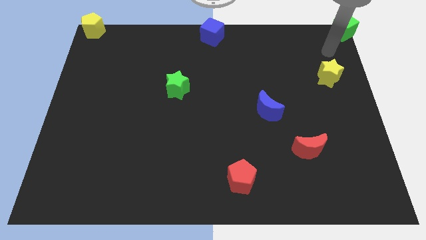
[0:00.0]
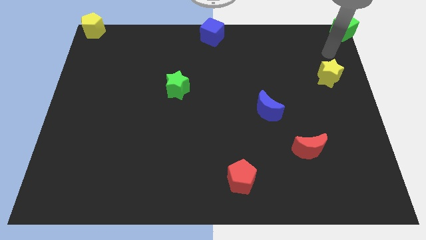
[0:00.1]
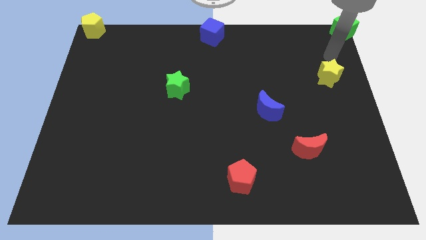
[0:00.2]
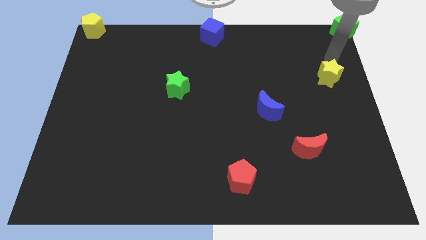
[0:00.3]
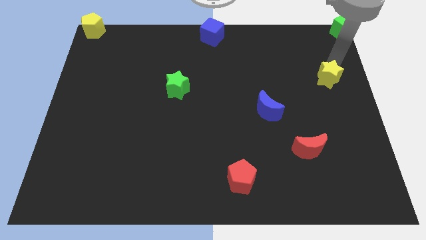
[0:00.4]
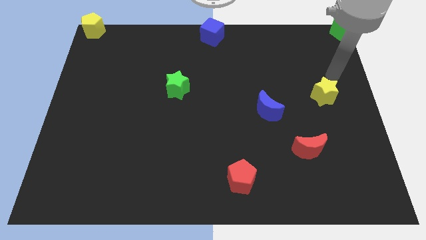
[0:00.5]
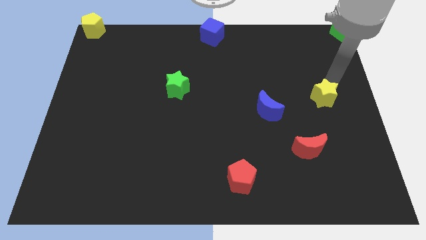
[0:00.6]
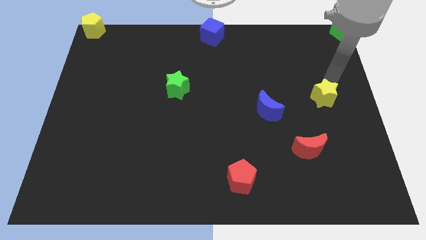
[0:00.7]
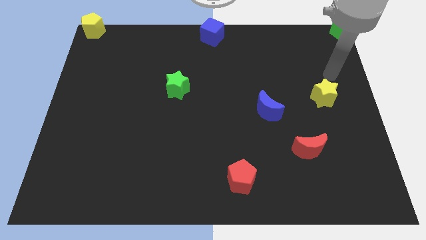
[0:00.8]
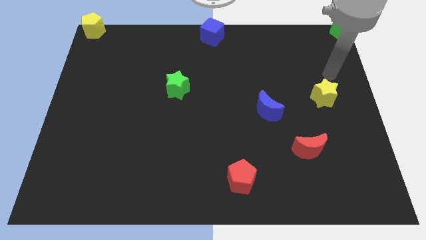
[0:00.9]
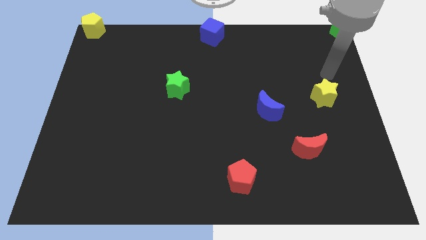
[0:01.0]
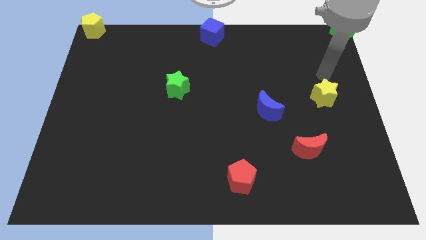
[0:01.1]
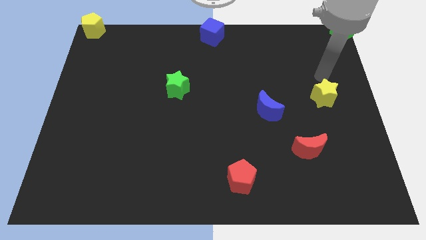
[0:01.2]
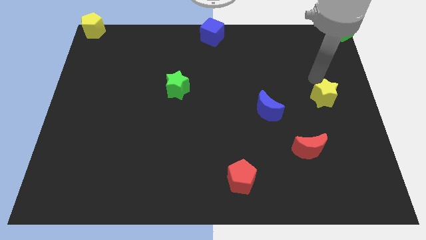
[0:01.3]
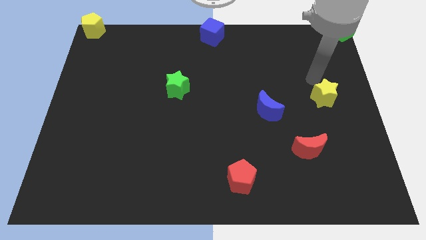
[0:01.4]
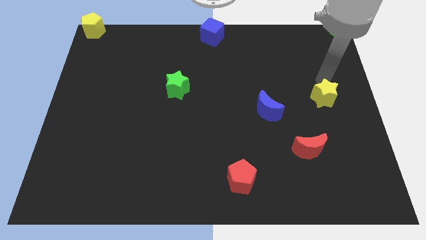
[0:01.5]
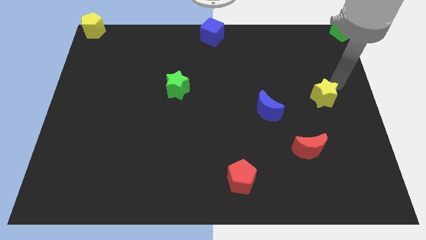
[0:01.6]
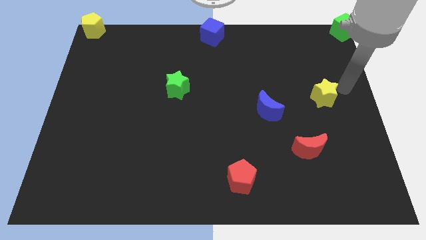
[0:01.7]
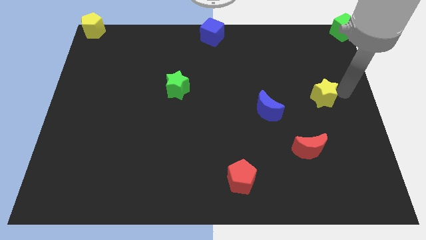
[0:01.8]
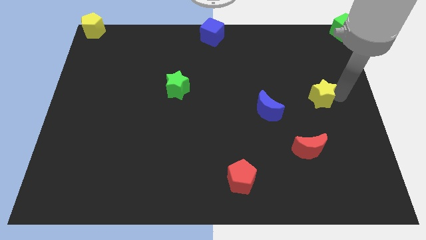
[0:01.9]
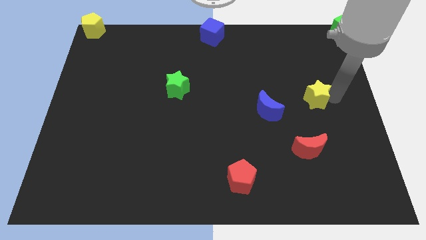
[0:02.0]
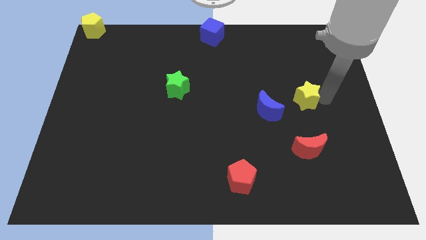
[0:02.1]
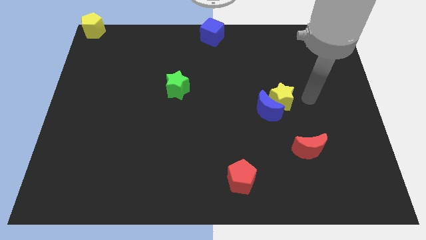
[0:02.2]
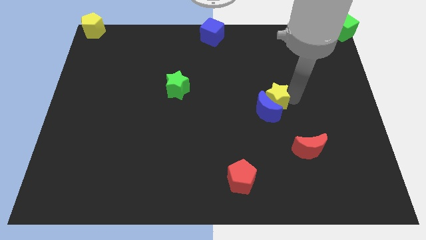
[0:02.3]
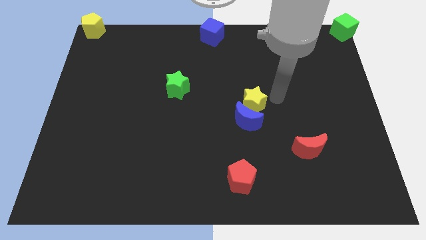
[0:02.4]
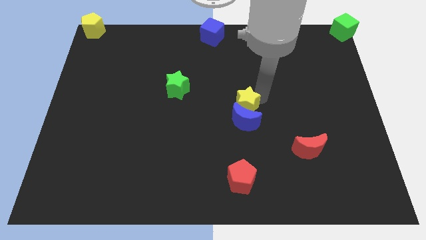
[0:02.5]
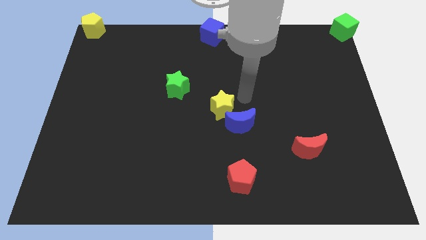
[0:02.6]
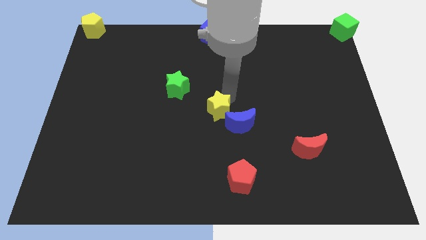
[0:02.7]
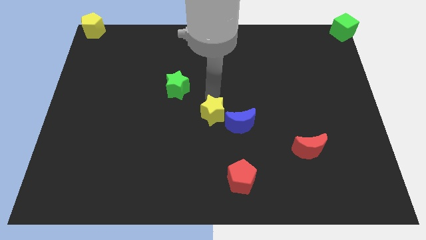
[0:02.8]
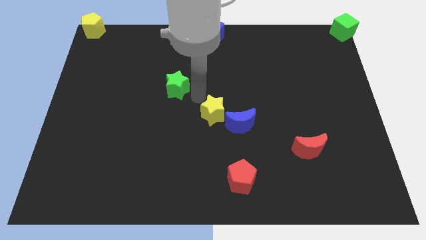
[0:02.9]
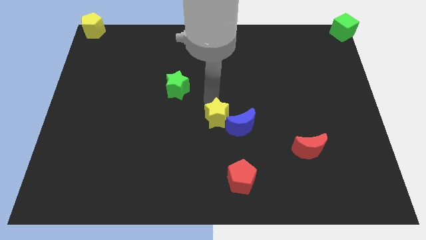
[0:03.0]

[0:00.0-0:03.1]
move the yellow star left side of the blue moon

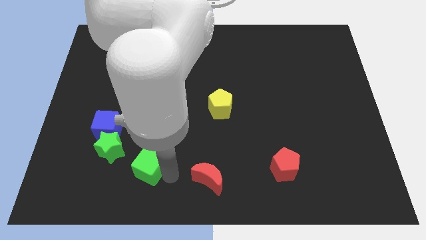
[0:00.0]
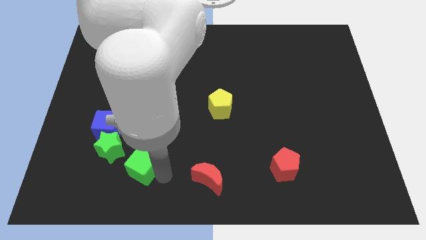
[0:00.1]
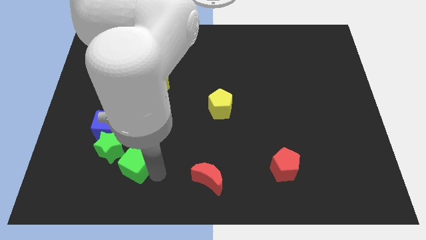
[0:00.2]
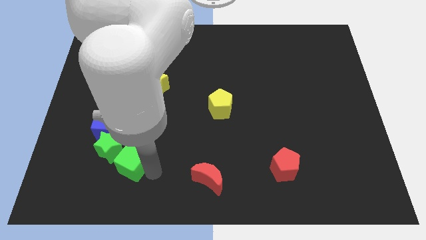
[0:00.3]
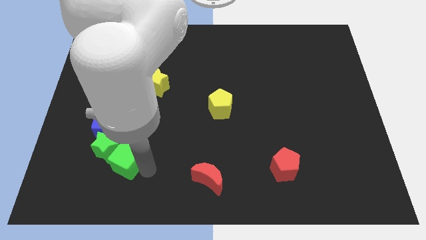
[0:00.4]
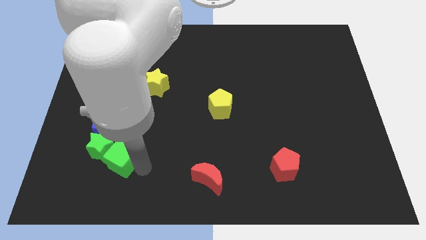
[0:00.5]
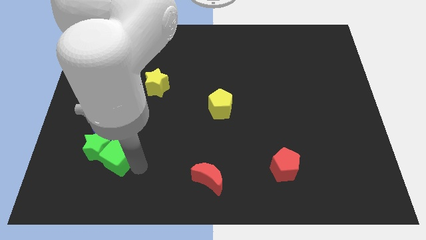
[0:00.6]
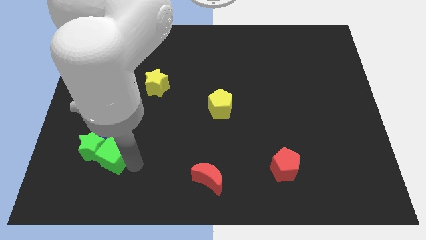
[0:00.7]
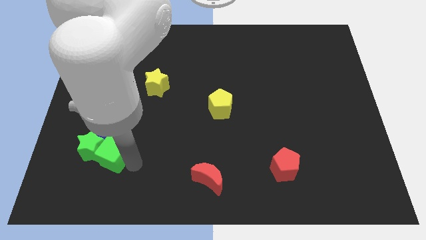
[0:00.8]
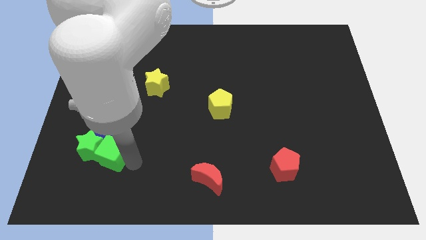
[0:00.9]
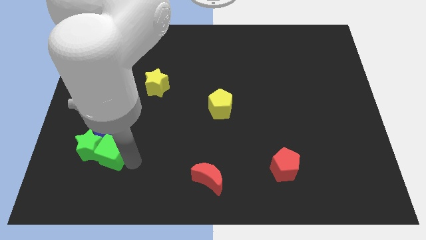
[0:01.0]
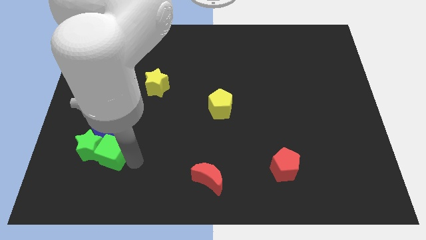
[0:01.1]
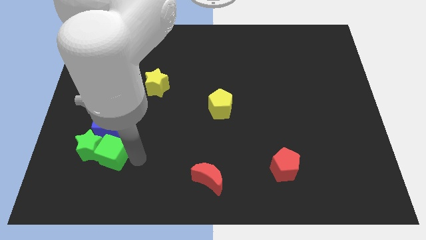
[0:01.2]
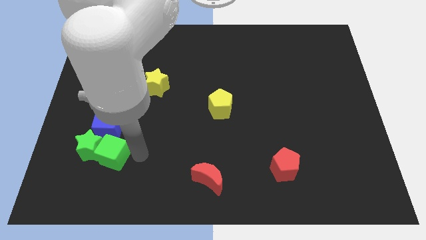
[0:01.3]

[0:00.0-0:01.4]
put green cube into green star

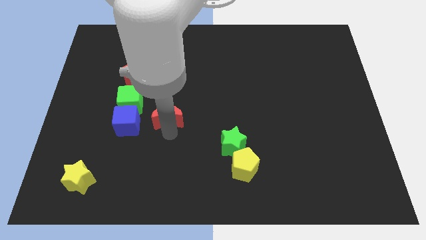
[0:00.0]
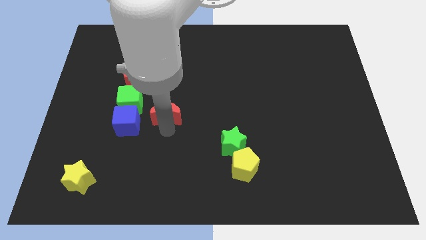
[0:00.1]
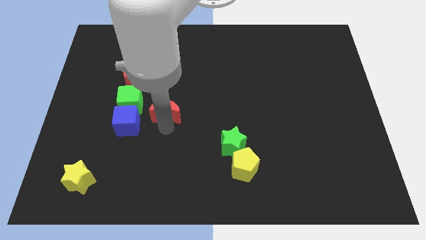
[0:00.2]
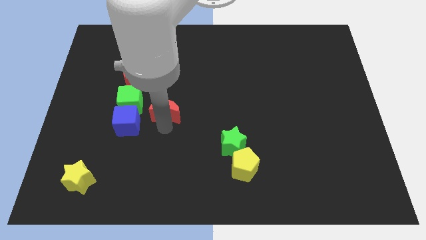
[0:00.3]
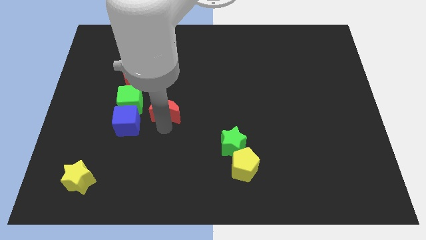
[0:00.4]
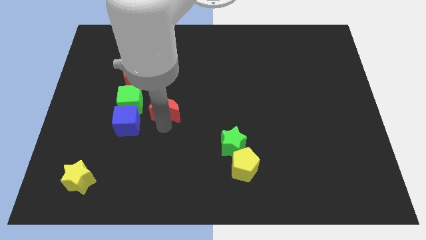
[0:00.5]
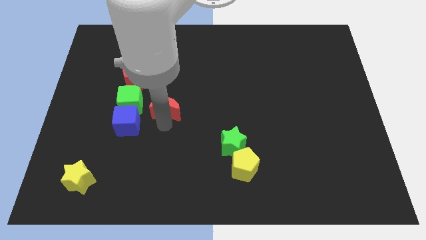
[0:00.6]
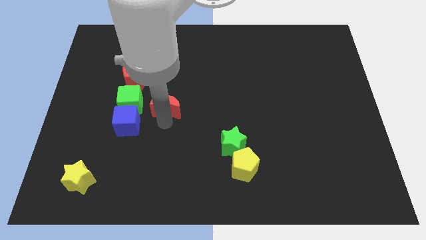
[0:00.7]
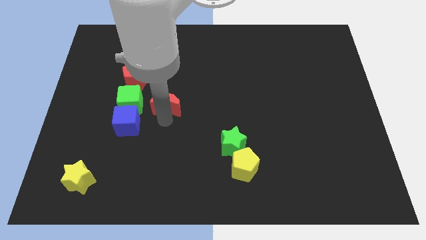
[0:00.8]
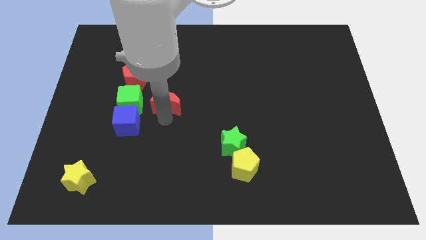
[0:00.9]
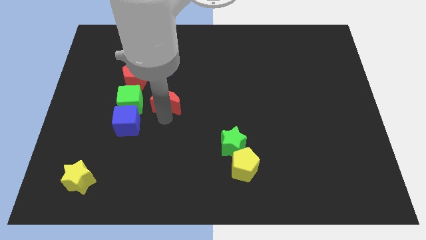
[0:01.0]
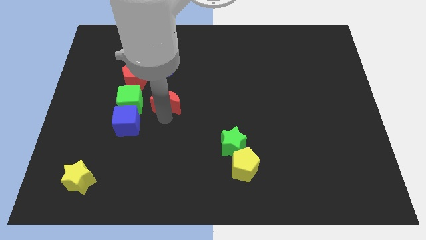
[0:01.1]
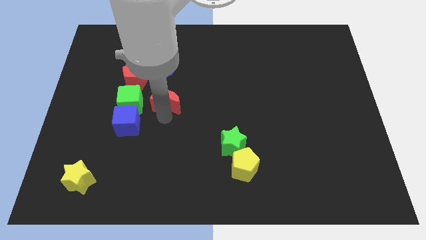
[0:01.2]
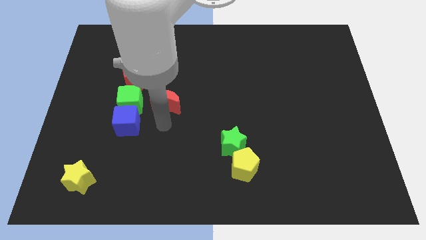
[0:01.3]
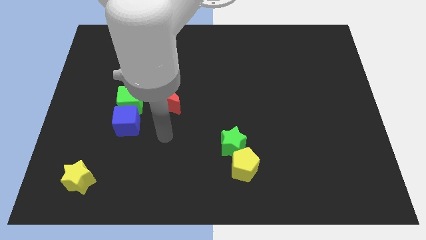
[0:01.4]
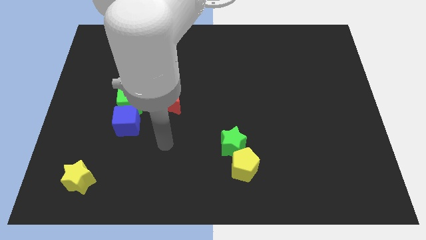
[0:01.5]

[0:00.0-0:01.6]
place red crescent to the right of green cube

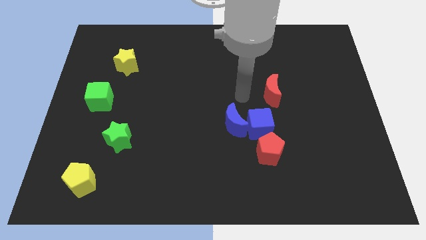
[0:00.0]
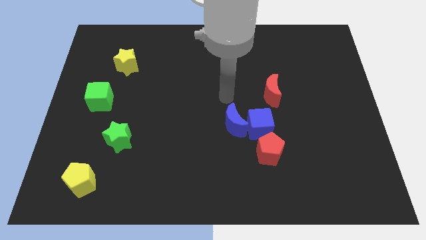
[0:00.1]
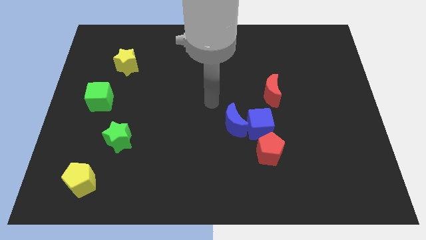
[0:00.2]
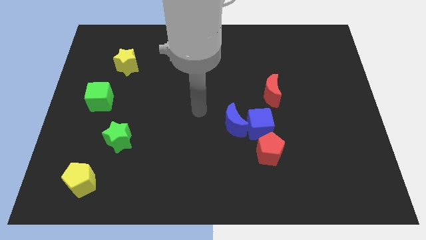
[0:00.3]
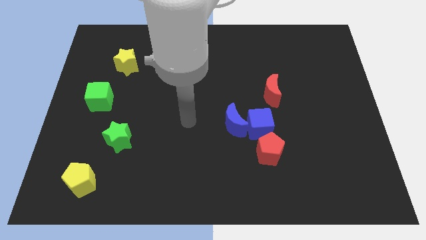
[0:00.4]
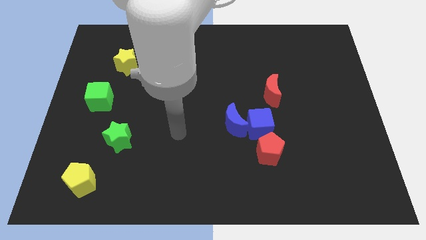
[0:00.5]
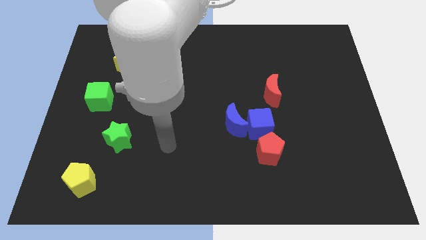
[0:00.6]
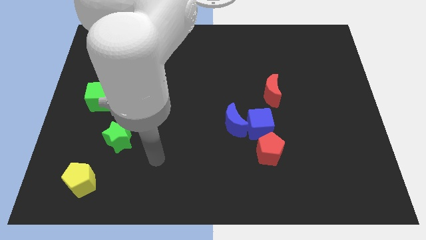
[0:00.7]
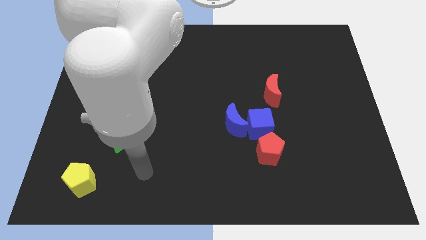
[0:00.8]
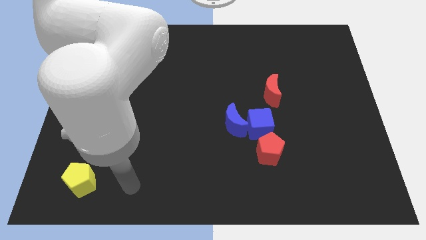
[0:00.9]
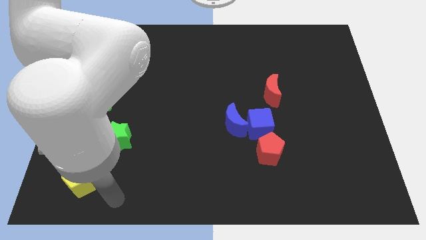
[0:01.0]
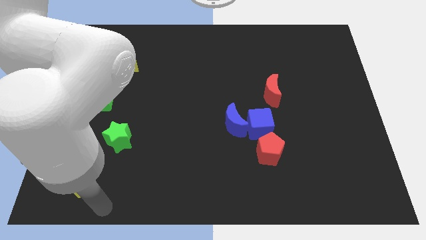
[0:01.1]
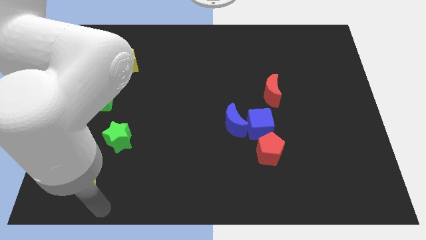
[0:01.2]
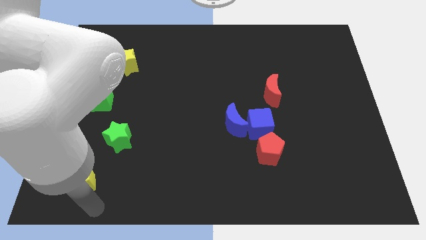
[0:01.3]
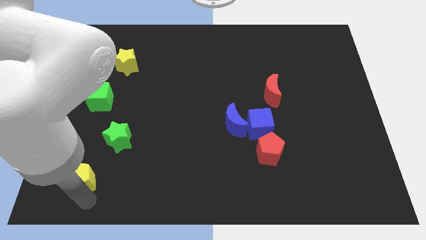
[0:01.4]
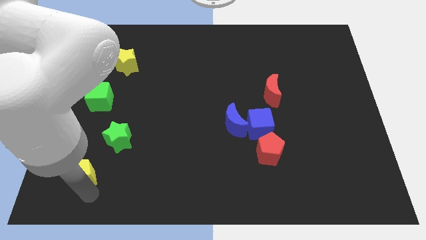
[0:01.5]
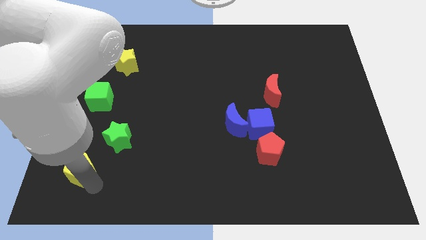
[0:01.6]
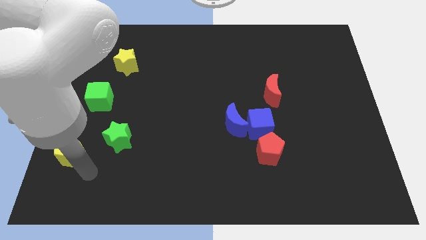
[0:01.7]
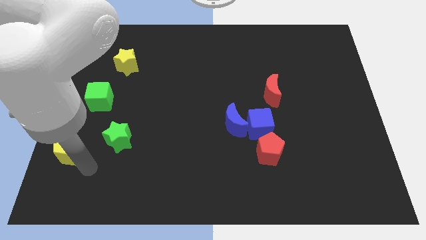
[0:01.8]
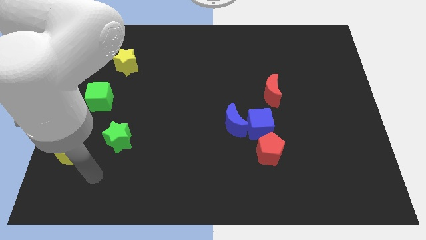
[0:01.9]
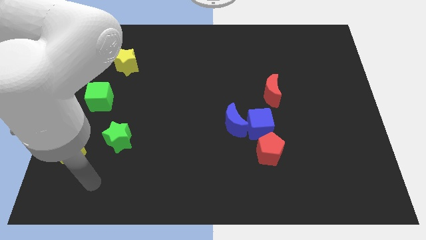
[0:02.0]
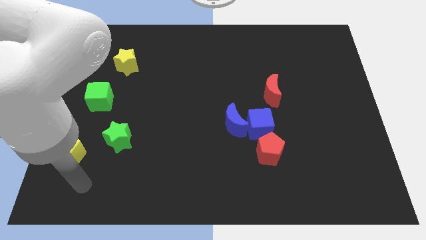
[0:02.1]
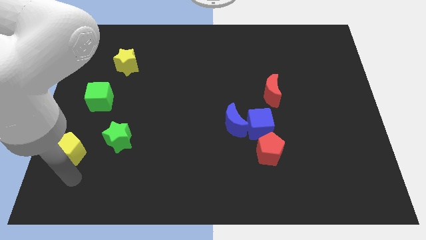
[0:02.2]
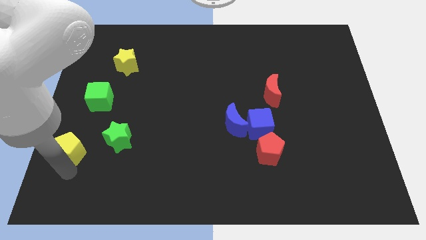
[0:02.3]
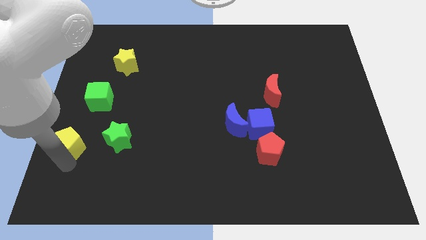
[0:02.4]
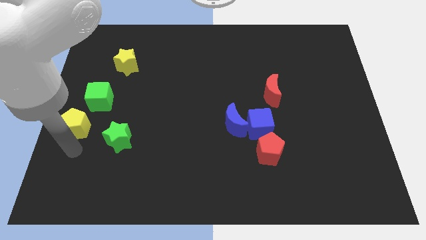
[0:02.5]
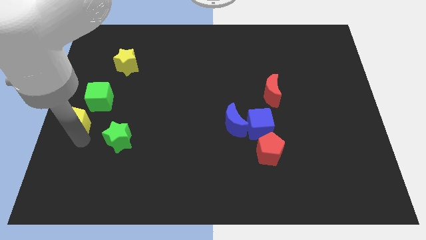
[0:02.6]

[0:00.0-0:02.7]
place the yellow pentagon at the bottom left side of green cube
